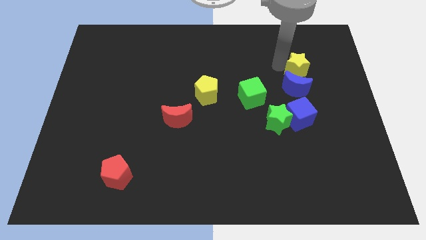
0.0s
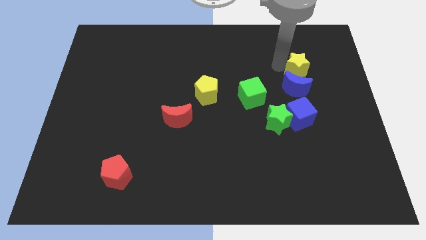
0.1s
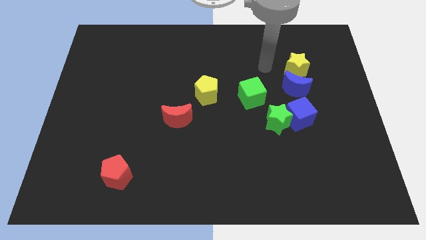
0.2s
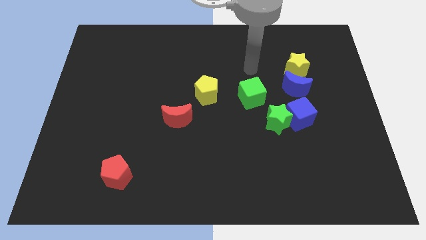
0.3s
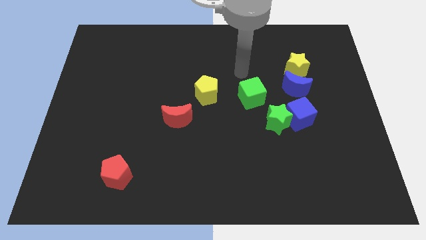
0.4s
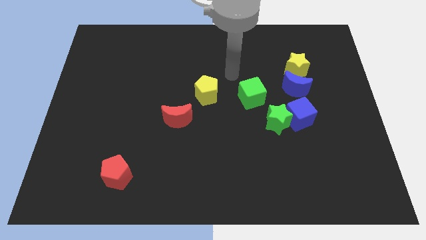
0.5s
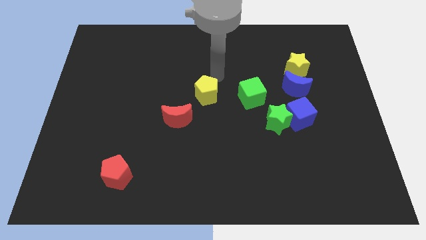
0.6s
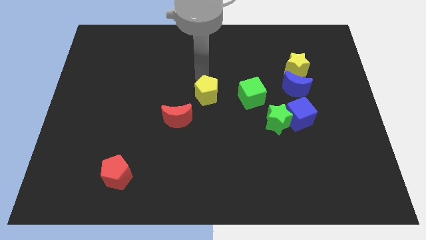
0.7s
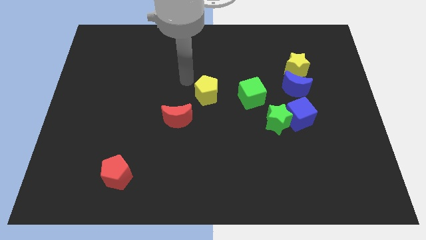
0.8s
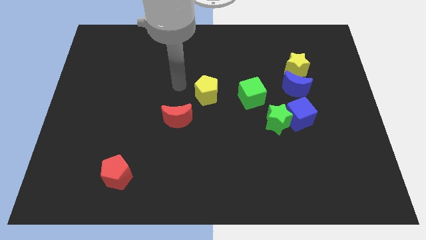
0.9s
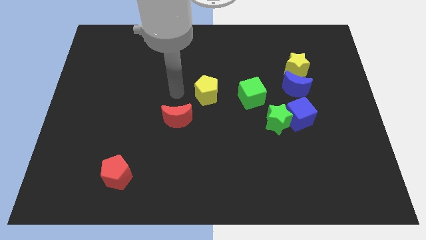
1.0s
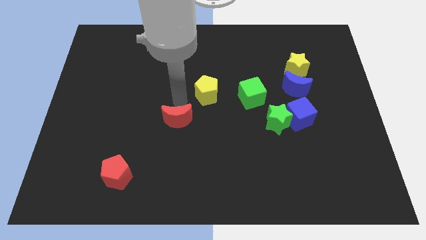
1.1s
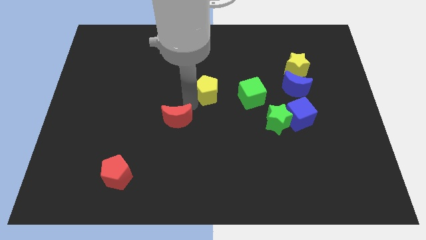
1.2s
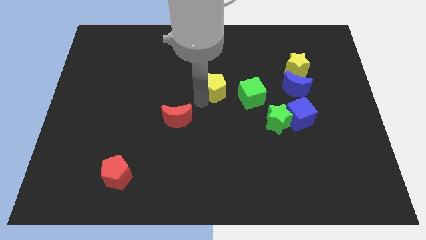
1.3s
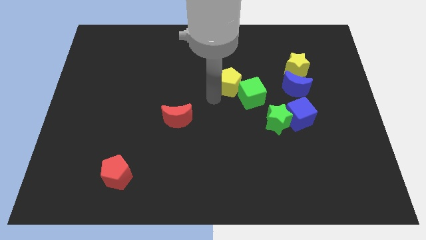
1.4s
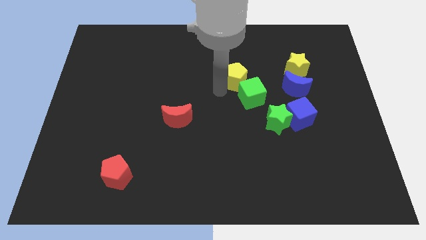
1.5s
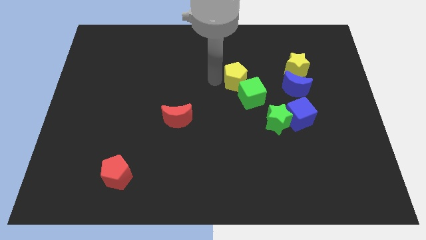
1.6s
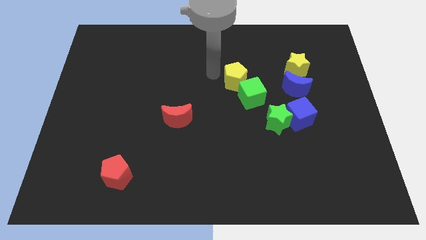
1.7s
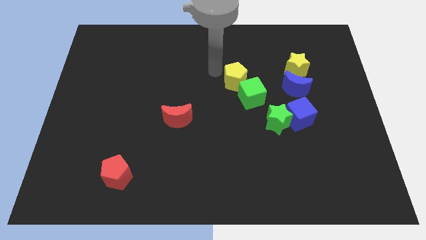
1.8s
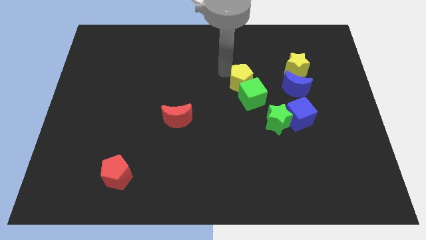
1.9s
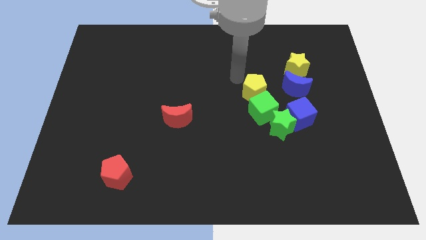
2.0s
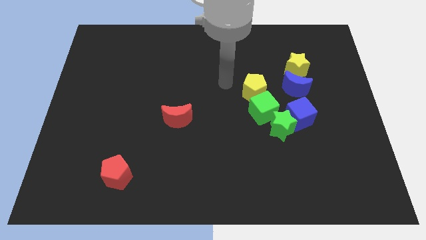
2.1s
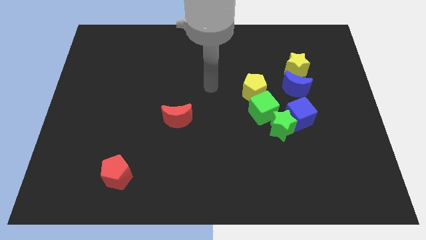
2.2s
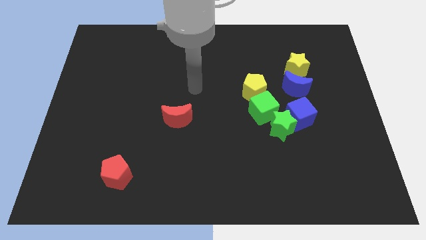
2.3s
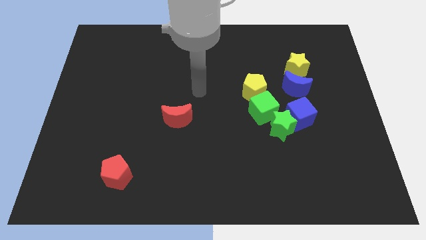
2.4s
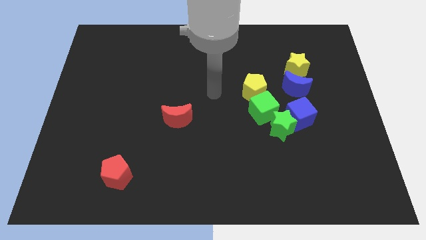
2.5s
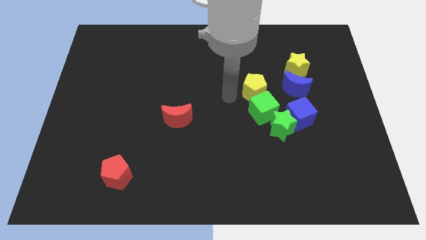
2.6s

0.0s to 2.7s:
push the yellow pentagon into the green cube

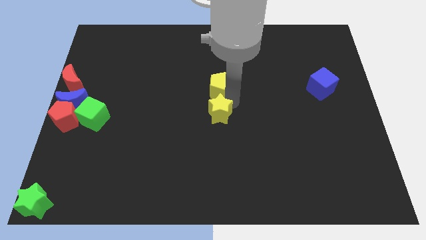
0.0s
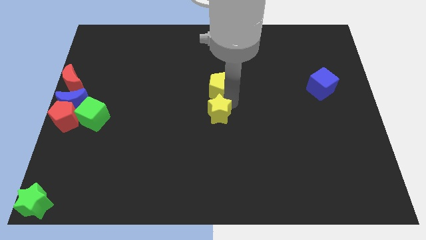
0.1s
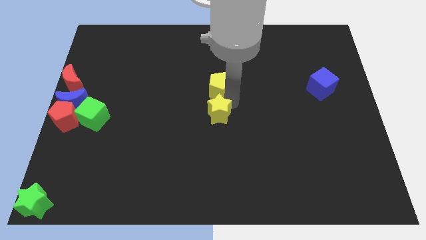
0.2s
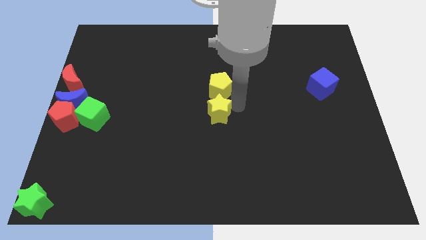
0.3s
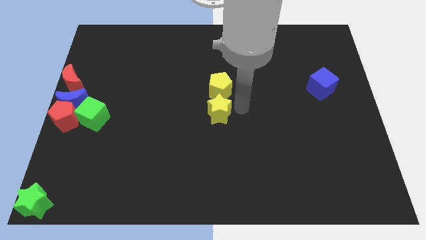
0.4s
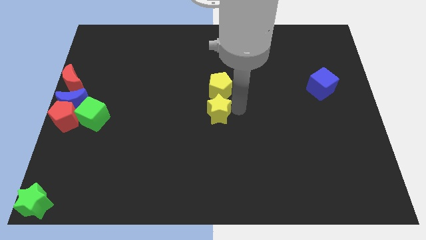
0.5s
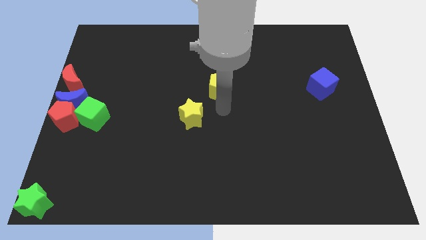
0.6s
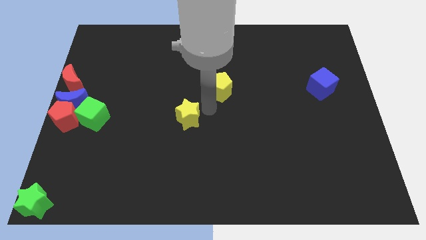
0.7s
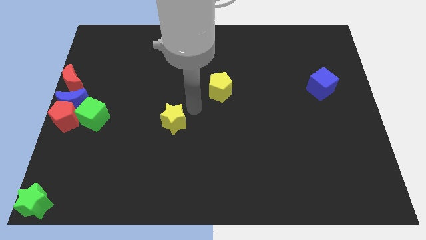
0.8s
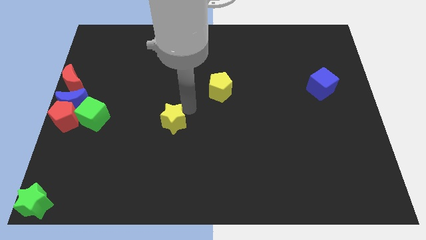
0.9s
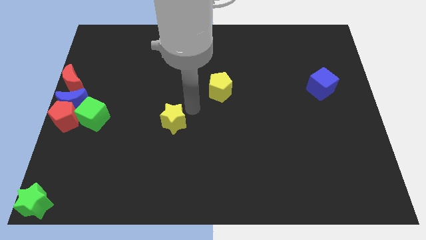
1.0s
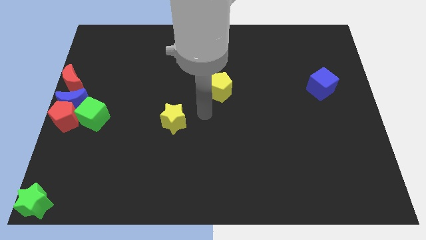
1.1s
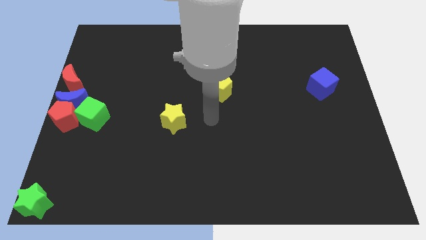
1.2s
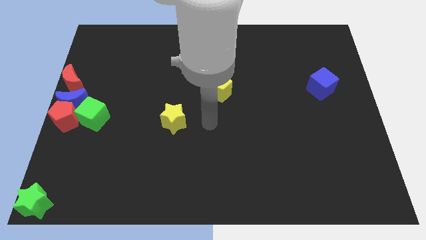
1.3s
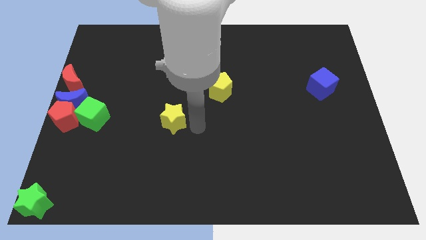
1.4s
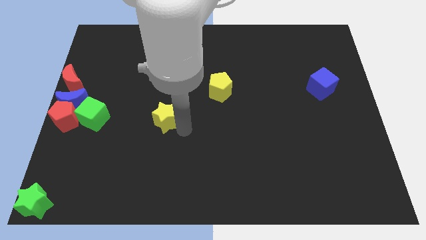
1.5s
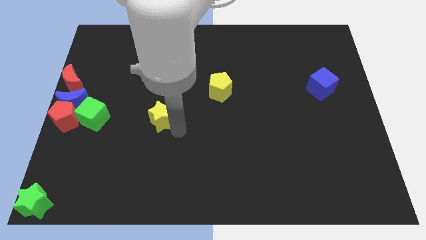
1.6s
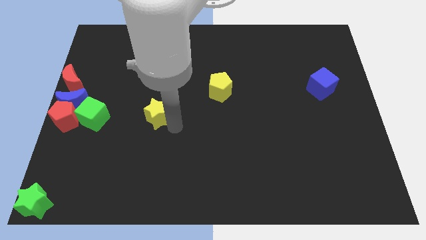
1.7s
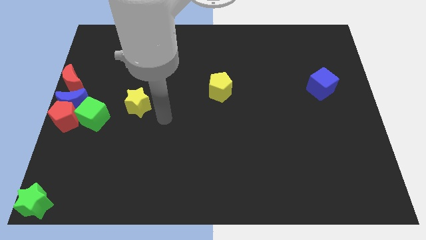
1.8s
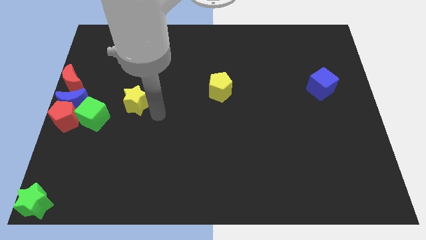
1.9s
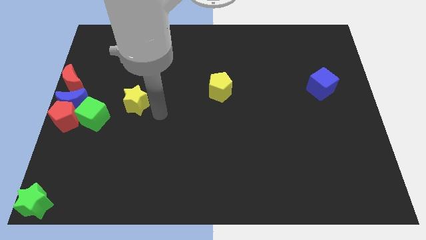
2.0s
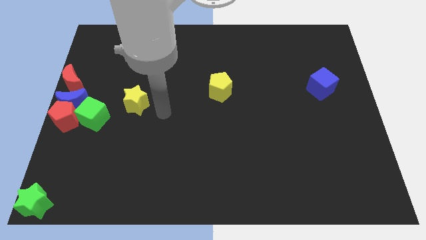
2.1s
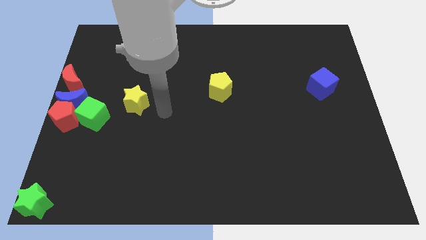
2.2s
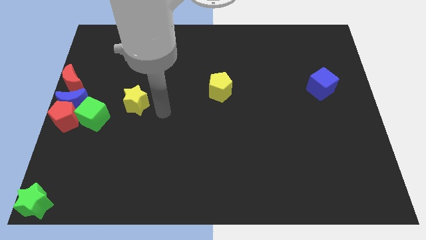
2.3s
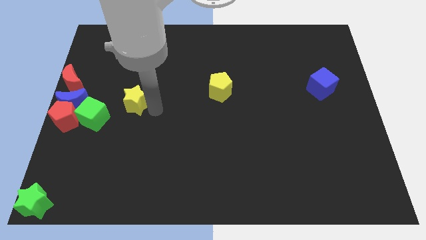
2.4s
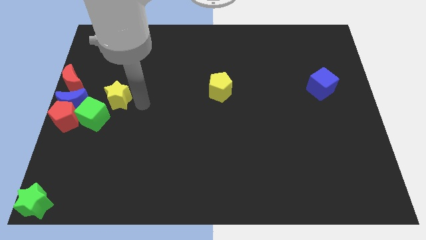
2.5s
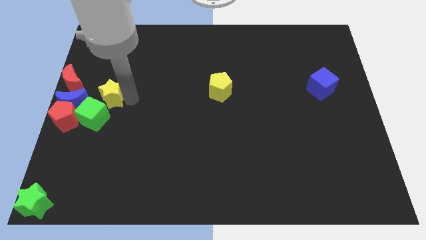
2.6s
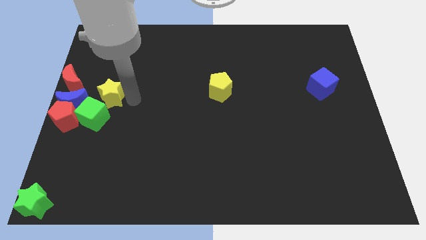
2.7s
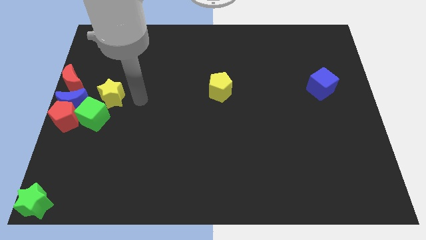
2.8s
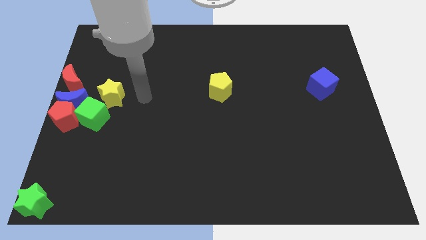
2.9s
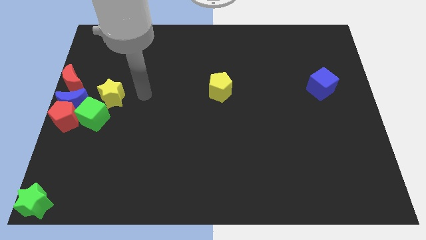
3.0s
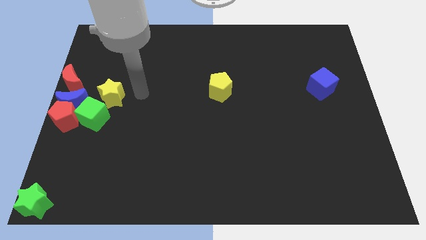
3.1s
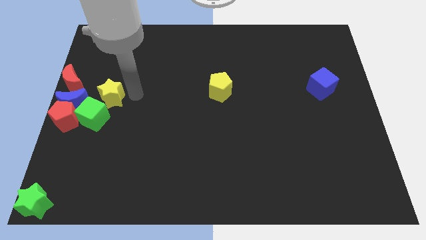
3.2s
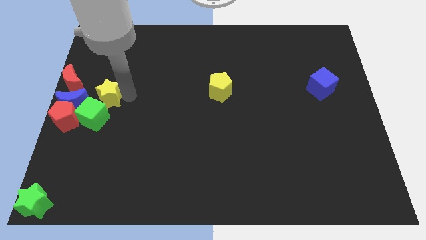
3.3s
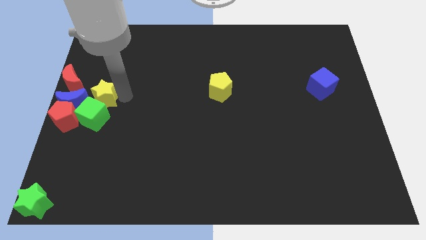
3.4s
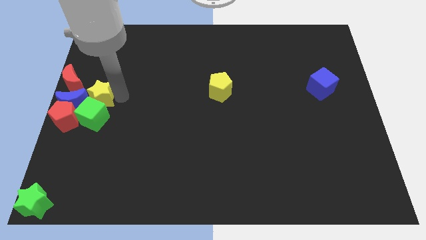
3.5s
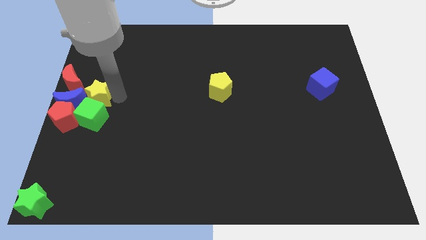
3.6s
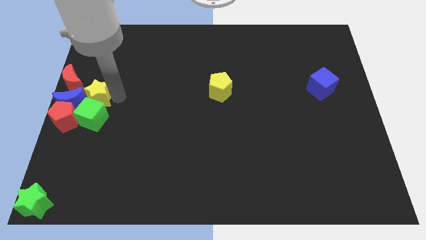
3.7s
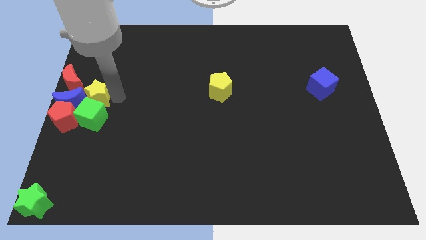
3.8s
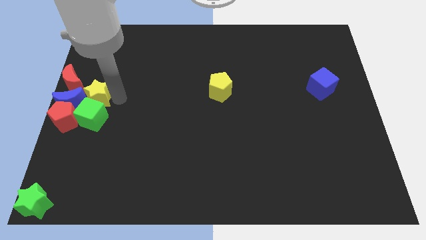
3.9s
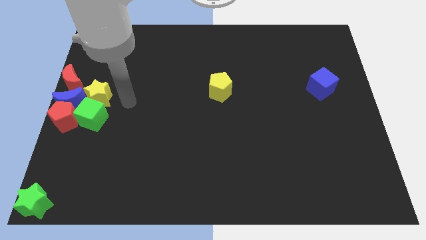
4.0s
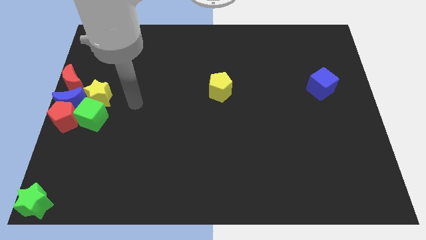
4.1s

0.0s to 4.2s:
move the yellow star to the top of green cube

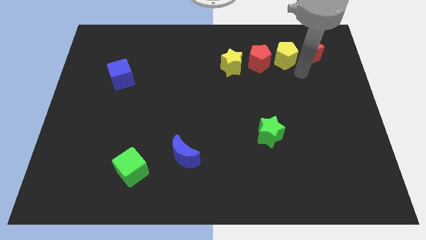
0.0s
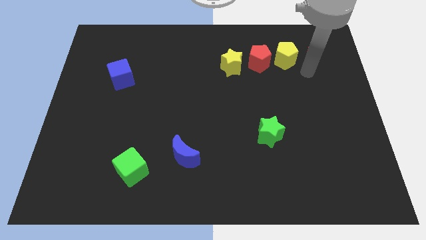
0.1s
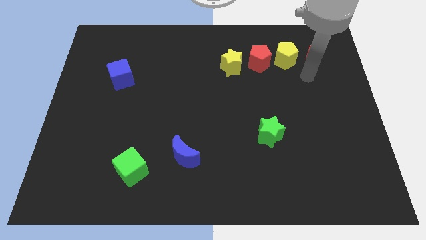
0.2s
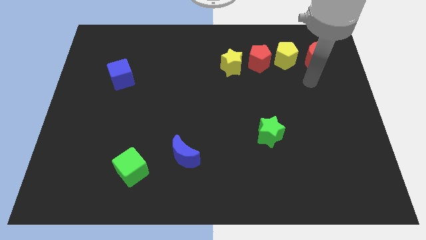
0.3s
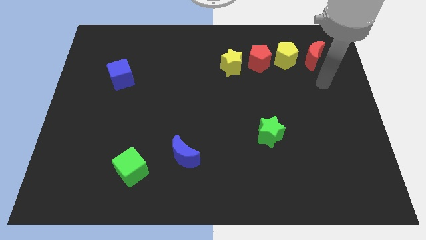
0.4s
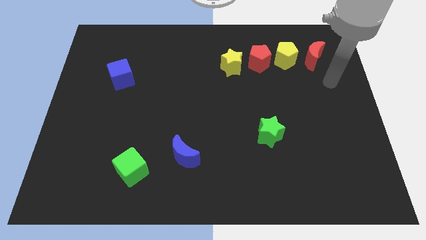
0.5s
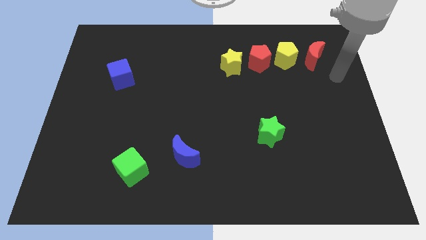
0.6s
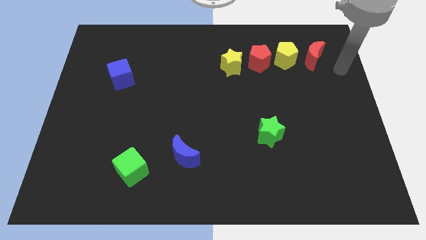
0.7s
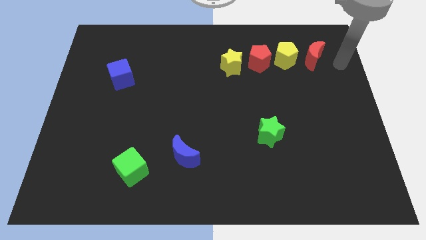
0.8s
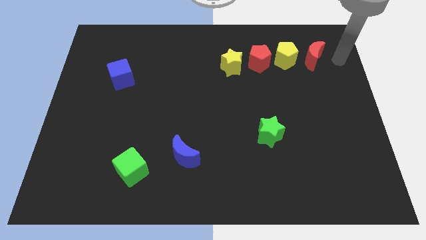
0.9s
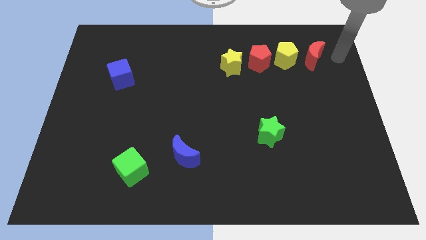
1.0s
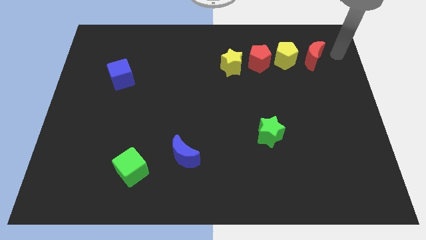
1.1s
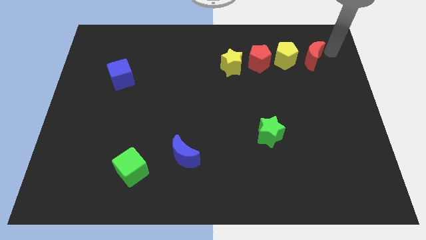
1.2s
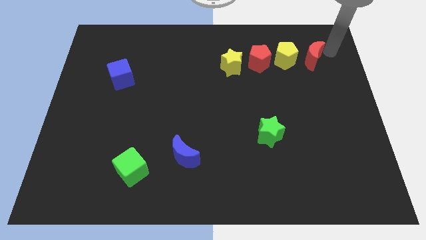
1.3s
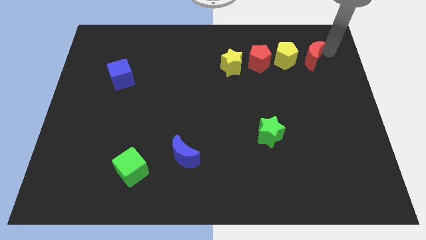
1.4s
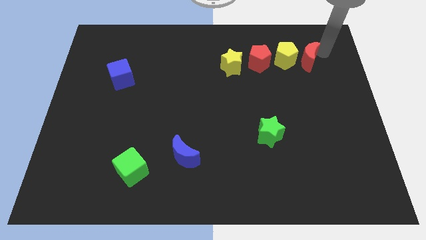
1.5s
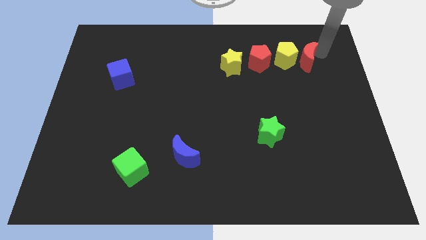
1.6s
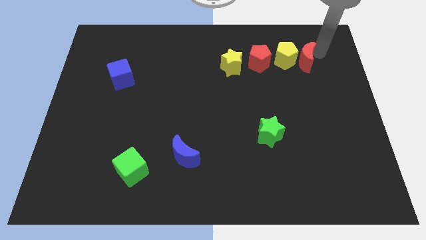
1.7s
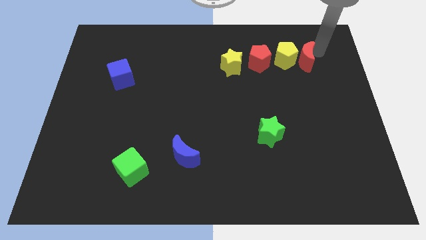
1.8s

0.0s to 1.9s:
place red crescent beside yellow pentagon

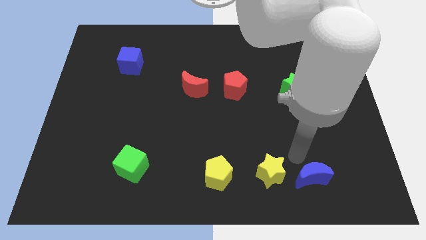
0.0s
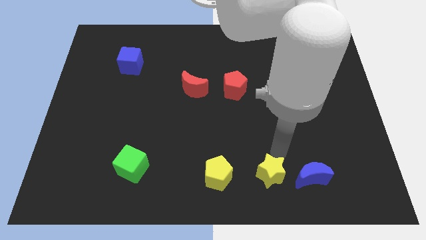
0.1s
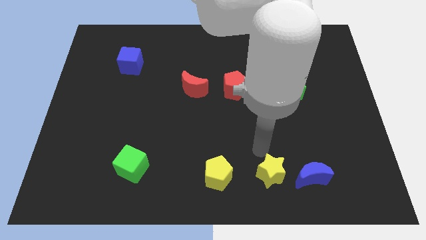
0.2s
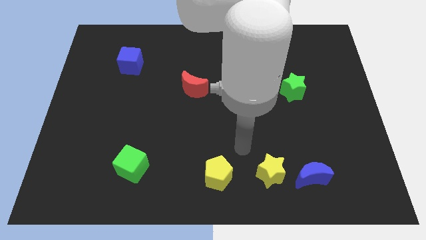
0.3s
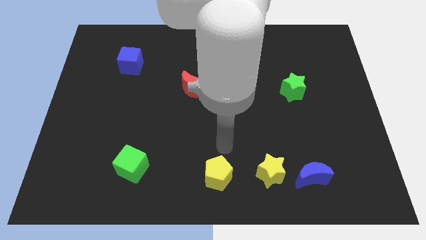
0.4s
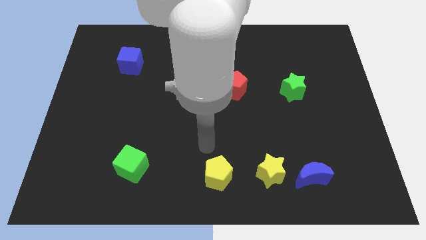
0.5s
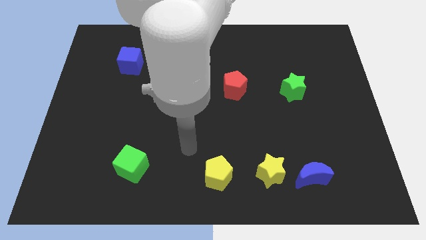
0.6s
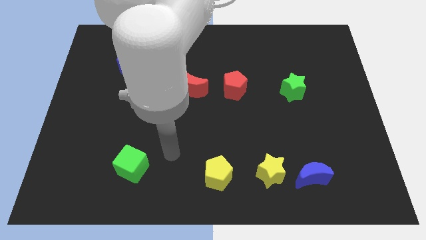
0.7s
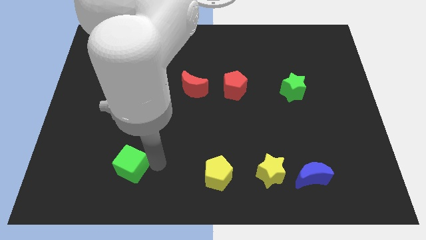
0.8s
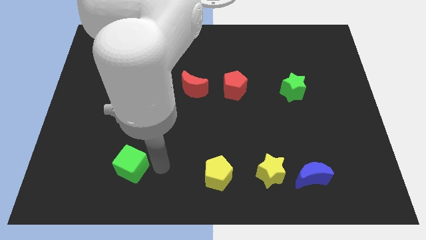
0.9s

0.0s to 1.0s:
move arm away from blue moon
